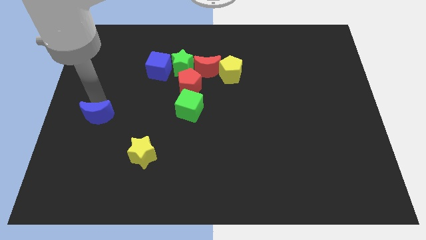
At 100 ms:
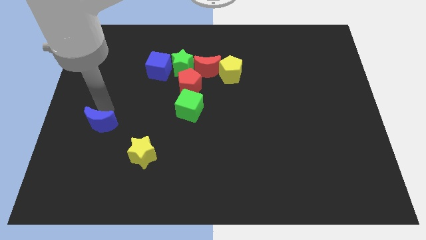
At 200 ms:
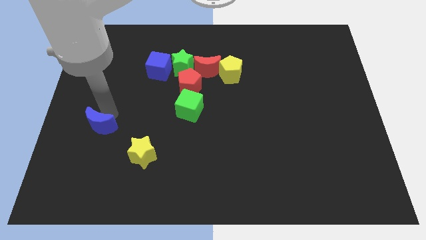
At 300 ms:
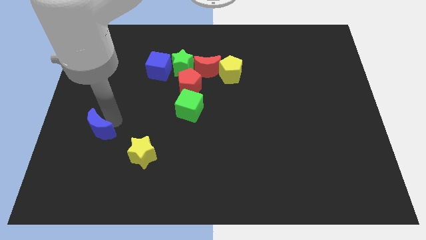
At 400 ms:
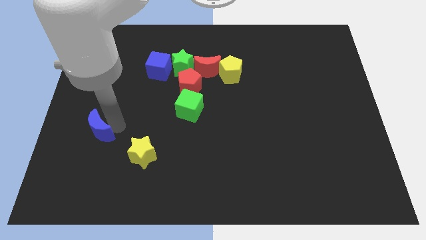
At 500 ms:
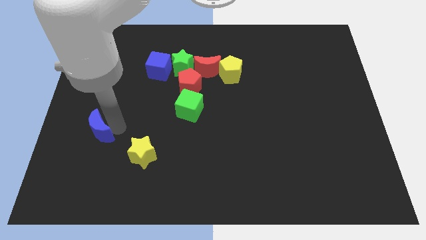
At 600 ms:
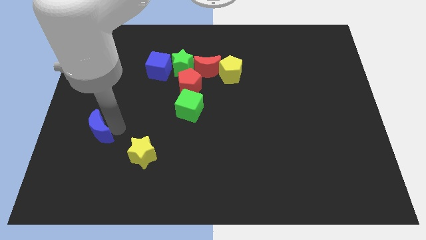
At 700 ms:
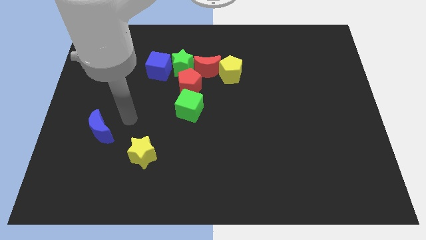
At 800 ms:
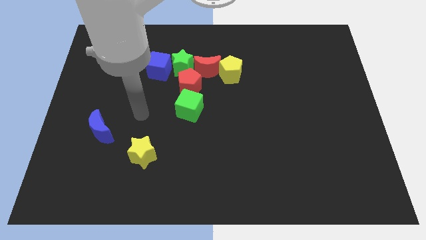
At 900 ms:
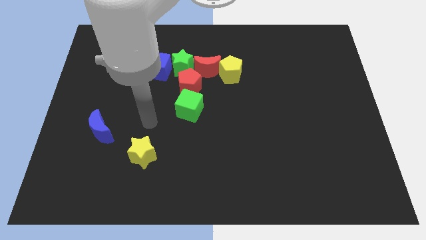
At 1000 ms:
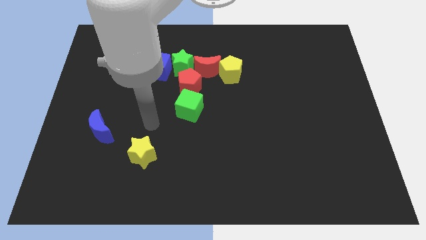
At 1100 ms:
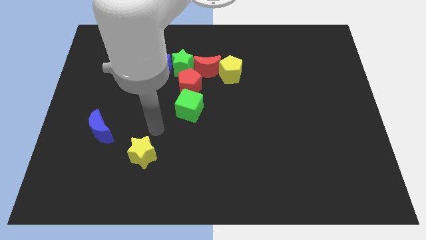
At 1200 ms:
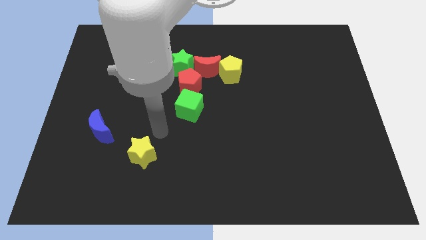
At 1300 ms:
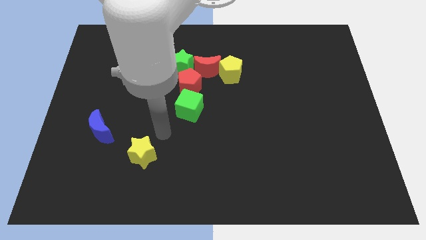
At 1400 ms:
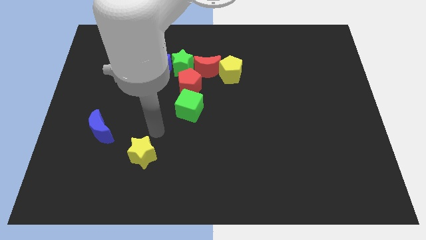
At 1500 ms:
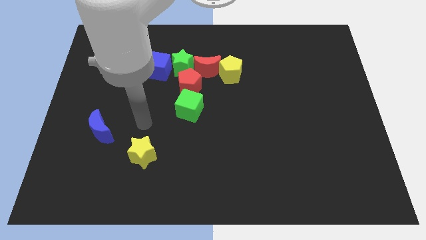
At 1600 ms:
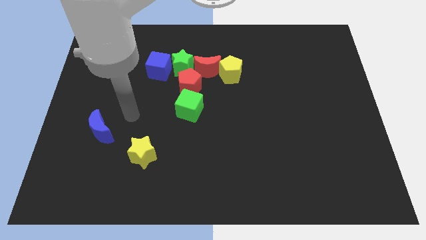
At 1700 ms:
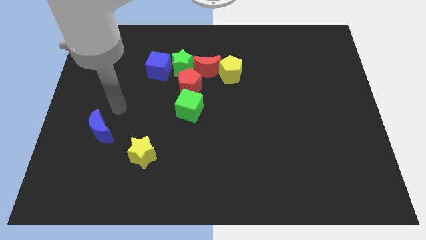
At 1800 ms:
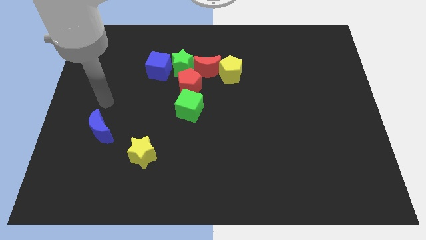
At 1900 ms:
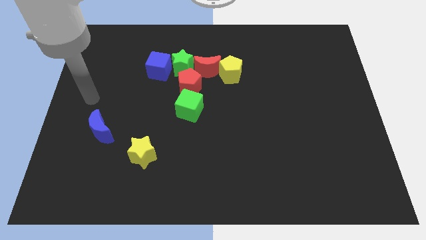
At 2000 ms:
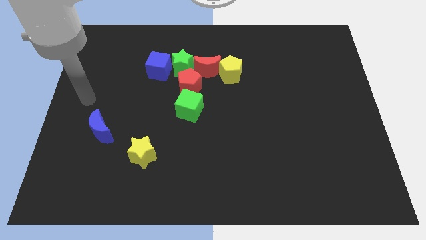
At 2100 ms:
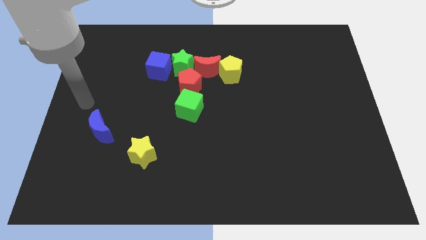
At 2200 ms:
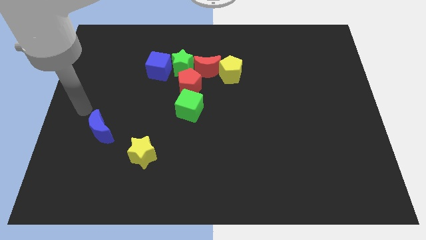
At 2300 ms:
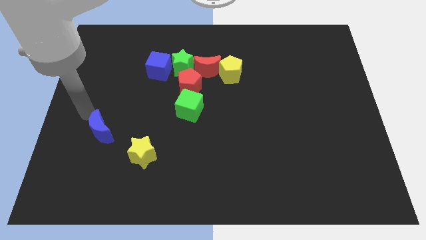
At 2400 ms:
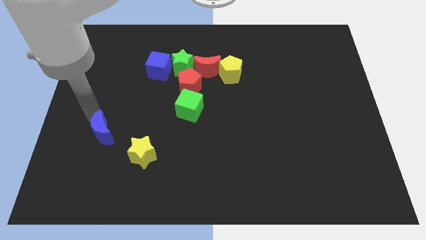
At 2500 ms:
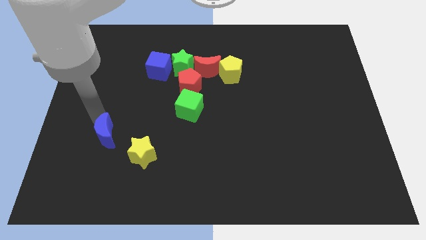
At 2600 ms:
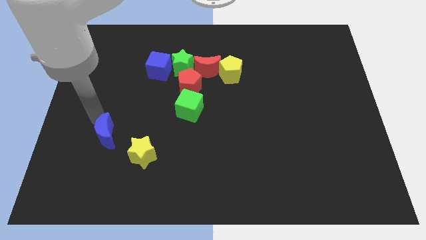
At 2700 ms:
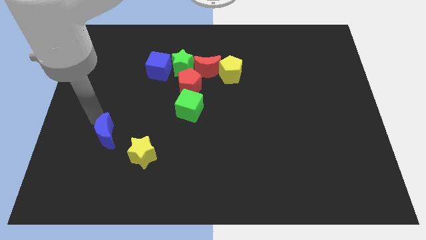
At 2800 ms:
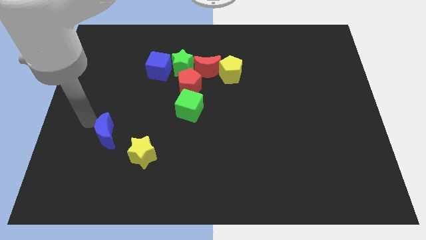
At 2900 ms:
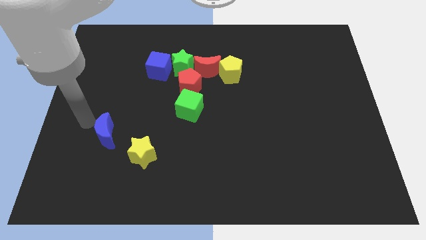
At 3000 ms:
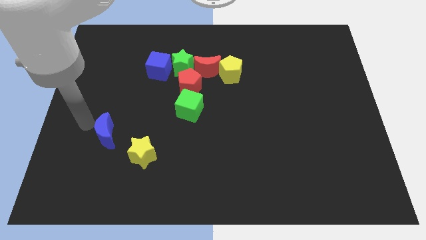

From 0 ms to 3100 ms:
push the blue moon diagonal top left to the yellow star

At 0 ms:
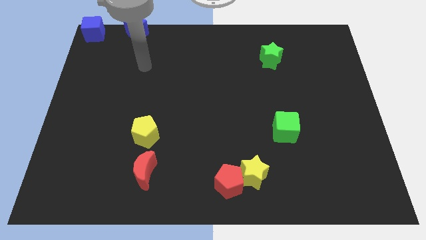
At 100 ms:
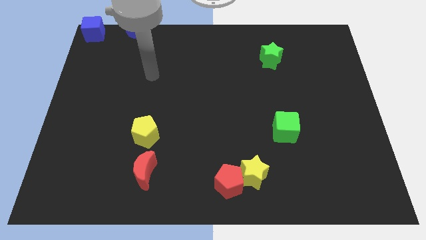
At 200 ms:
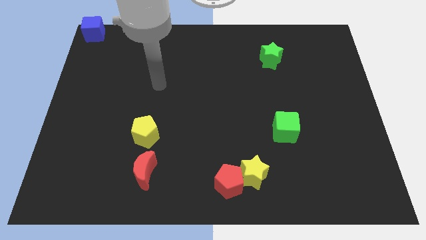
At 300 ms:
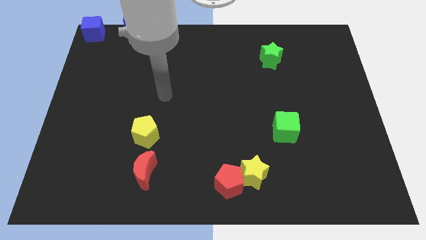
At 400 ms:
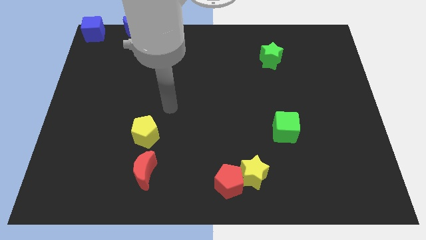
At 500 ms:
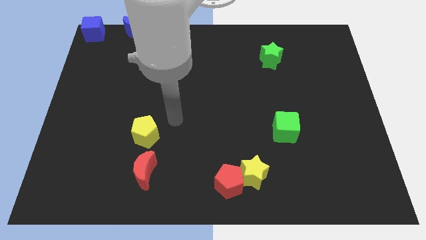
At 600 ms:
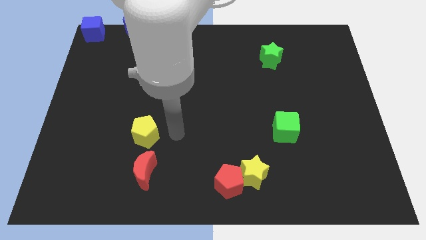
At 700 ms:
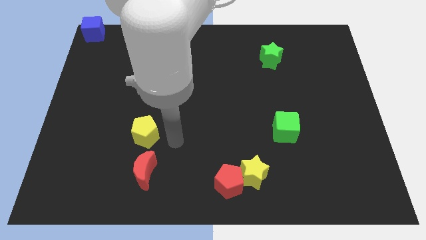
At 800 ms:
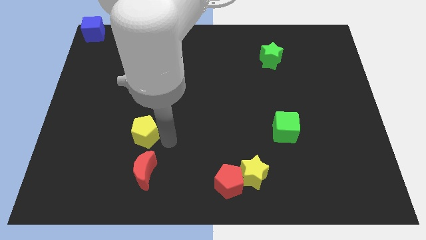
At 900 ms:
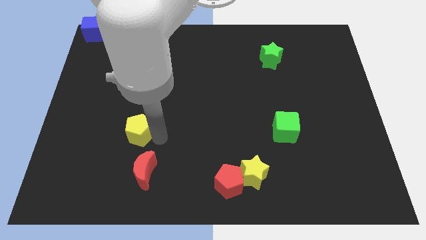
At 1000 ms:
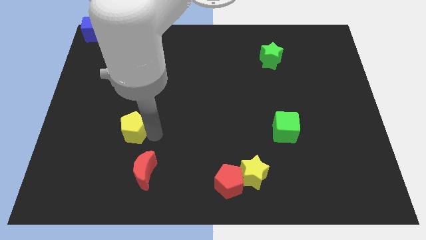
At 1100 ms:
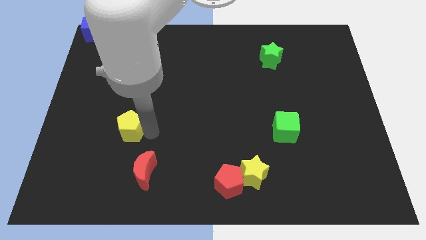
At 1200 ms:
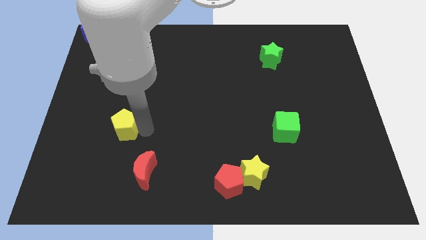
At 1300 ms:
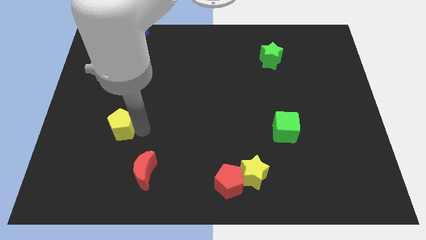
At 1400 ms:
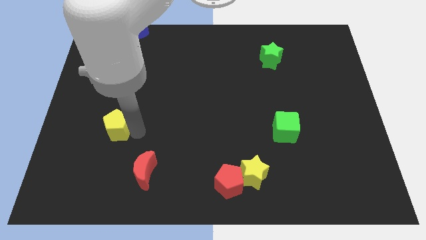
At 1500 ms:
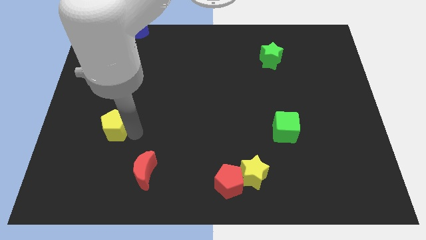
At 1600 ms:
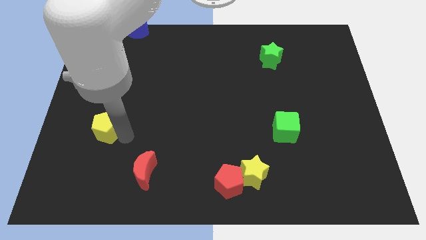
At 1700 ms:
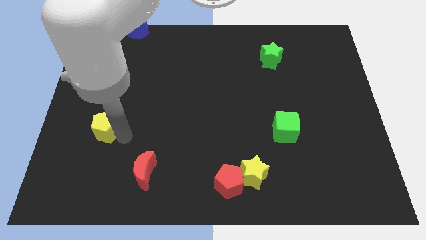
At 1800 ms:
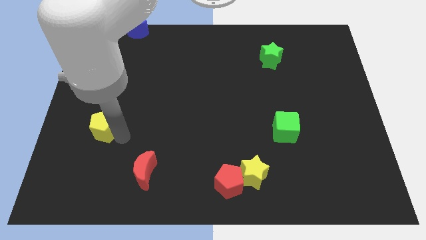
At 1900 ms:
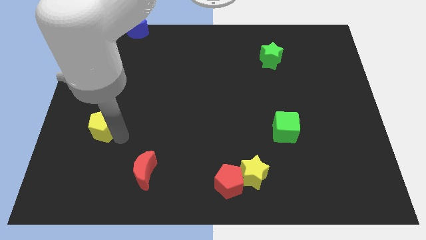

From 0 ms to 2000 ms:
drag the yellow pentagon to the left side of the board

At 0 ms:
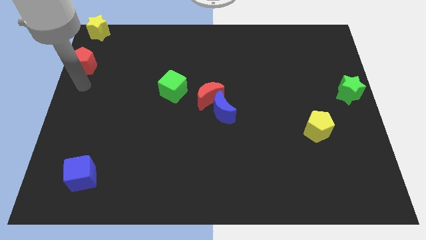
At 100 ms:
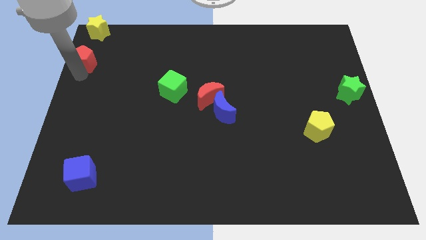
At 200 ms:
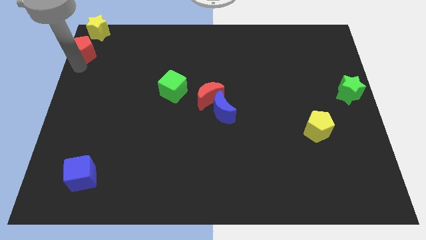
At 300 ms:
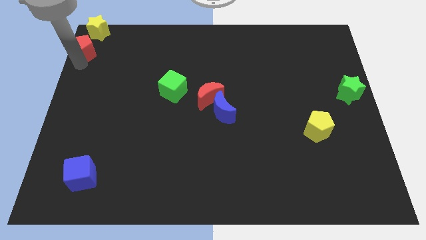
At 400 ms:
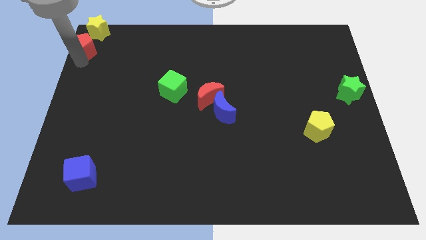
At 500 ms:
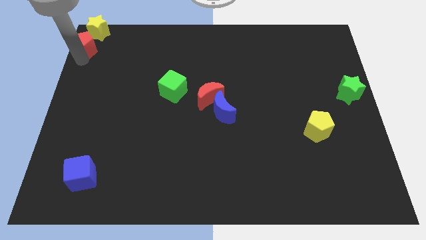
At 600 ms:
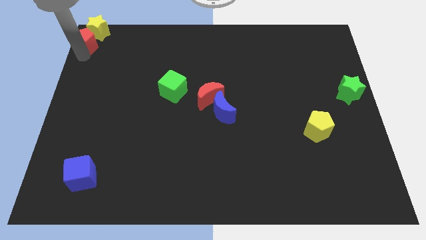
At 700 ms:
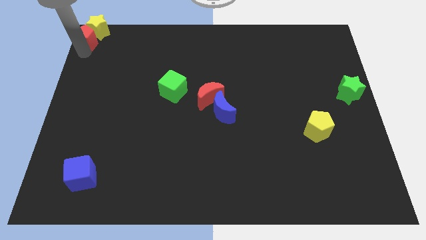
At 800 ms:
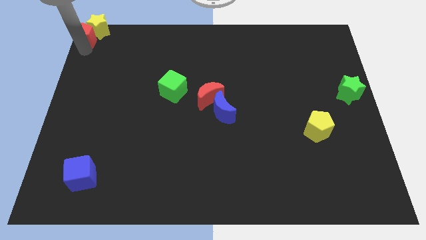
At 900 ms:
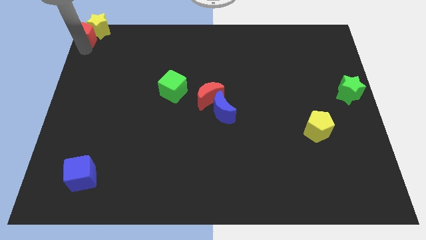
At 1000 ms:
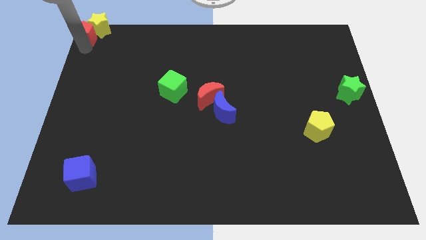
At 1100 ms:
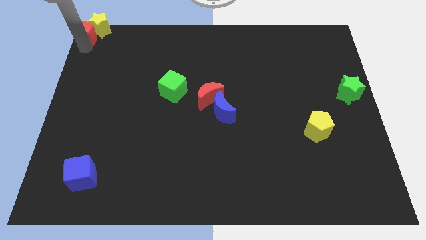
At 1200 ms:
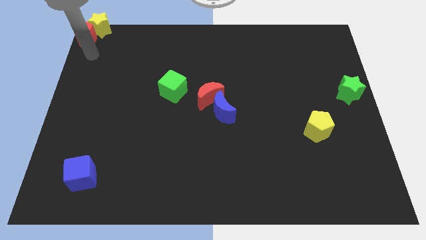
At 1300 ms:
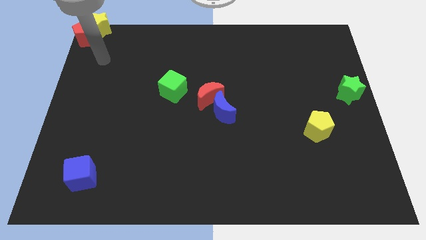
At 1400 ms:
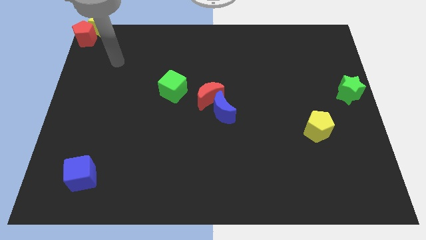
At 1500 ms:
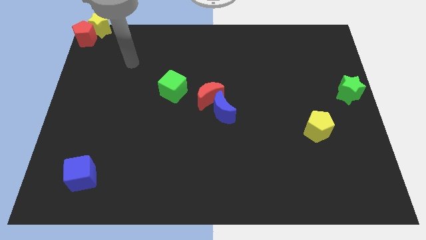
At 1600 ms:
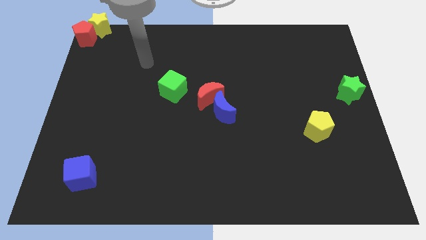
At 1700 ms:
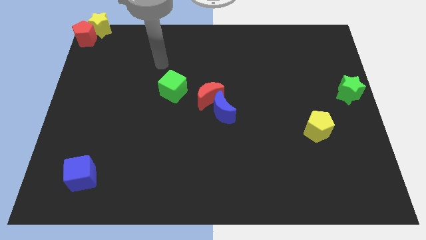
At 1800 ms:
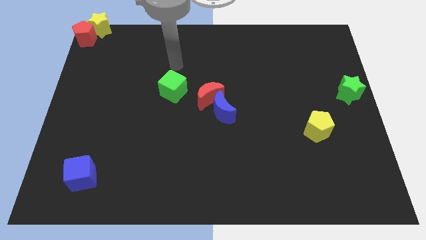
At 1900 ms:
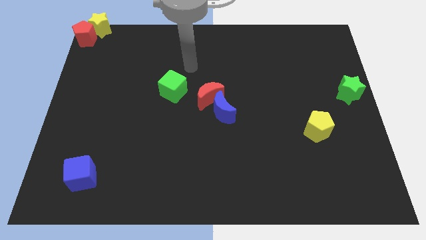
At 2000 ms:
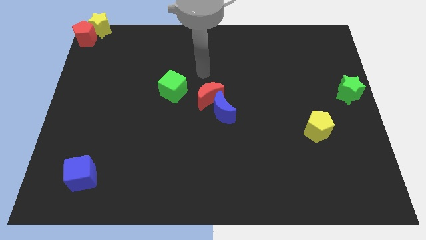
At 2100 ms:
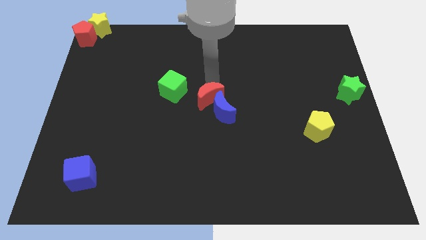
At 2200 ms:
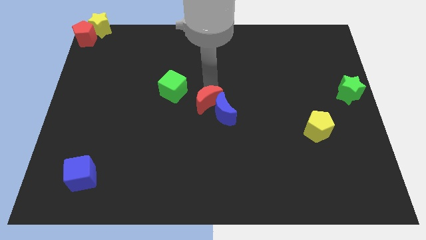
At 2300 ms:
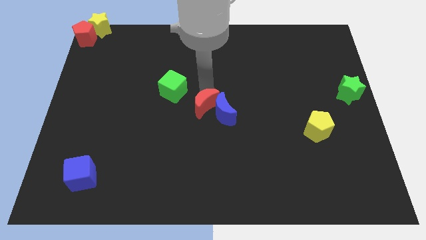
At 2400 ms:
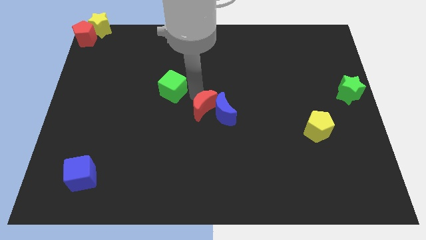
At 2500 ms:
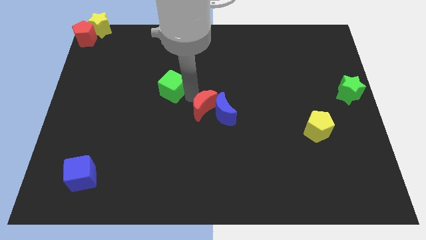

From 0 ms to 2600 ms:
move the red pentagon to the left of the yellow star

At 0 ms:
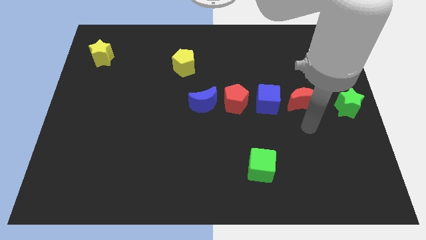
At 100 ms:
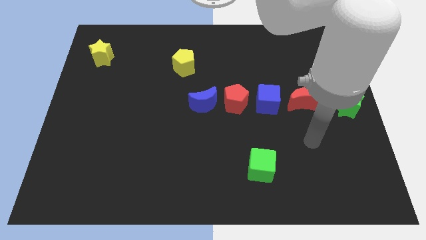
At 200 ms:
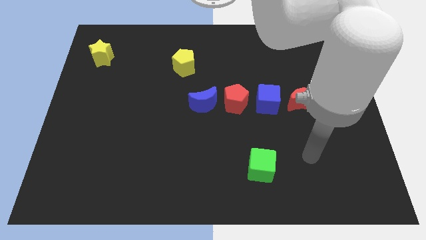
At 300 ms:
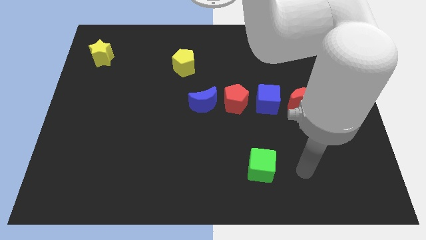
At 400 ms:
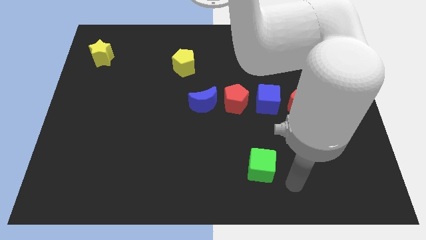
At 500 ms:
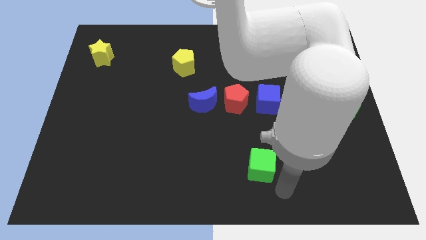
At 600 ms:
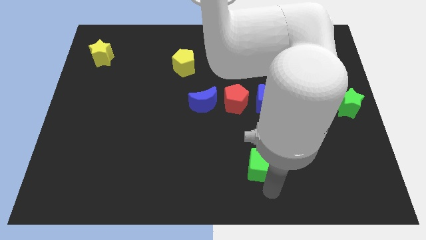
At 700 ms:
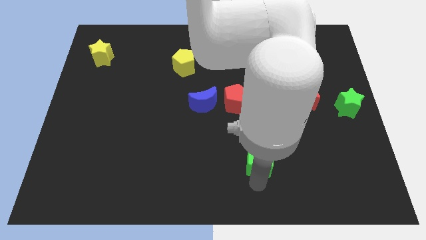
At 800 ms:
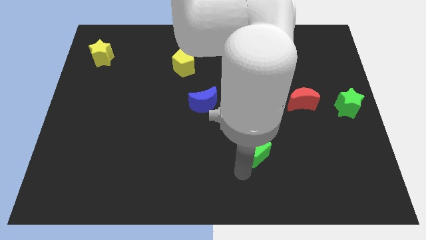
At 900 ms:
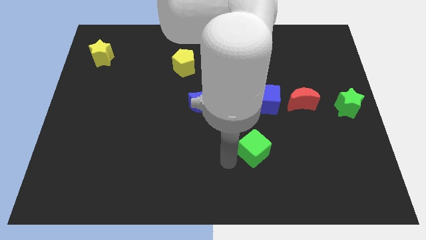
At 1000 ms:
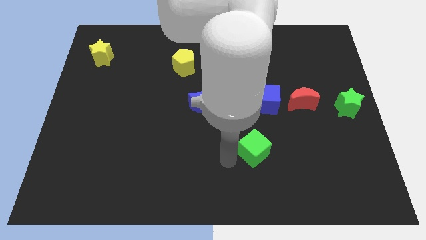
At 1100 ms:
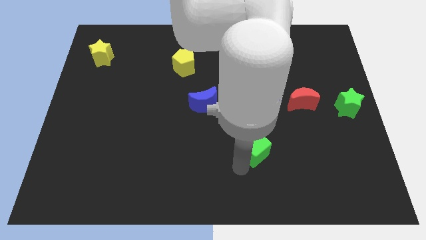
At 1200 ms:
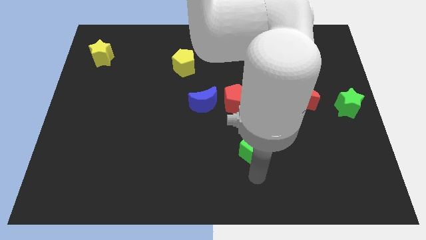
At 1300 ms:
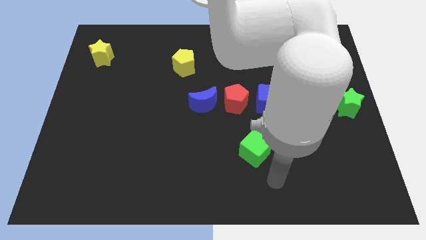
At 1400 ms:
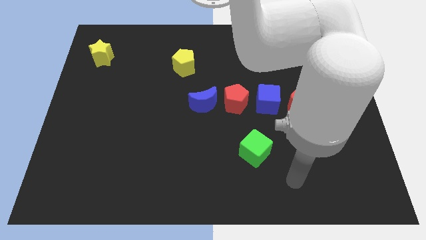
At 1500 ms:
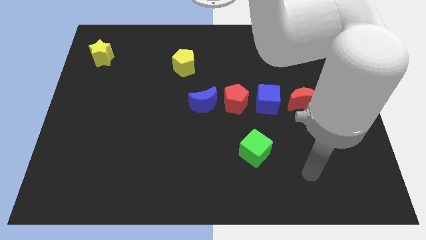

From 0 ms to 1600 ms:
push the green cube slightly to the top of the board
